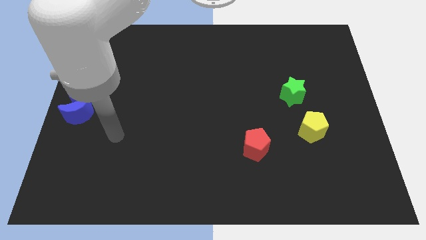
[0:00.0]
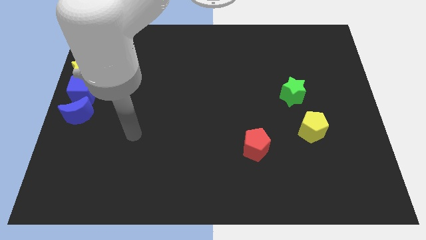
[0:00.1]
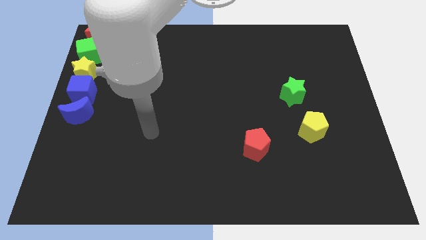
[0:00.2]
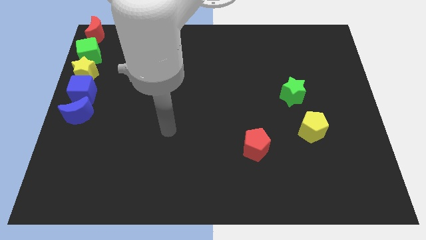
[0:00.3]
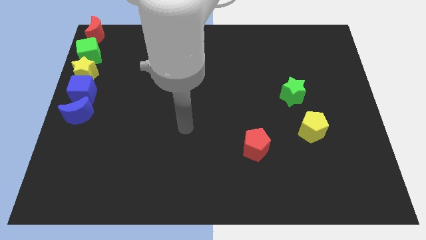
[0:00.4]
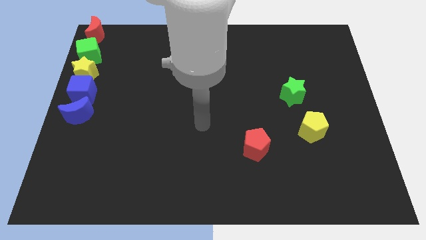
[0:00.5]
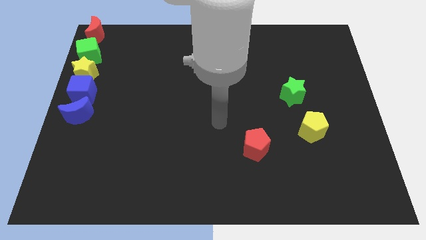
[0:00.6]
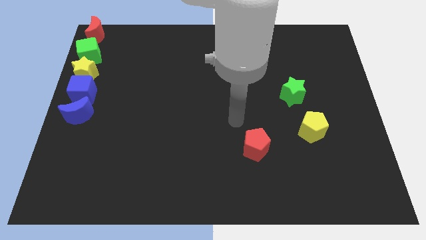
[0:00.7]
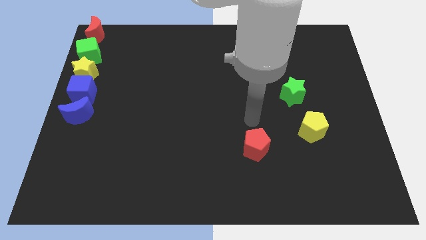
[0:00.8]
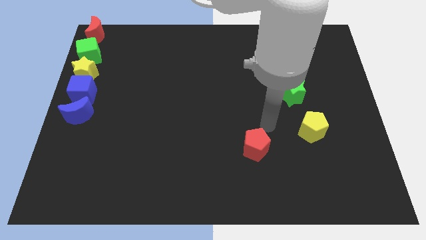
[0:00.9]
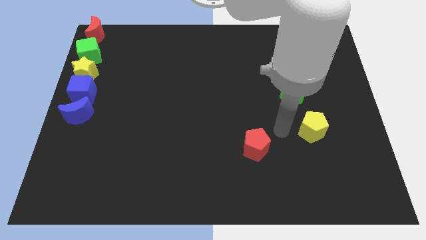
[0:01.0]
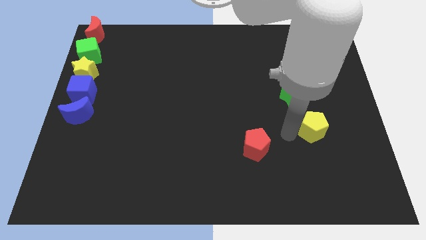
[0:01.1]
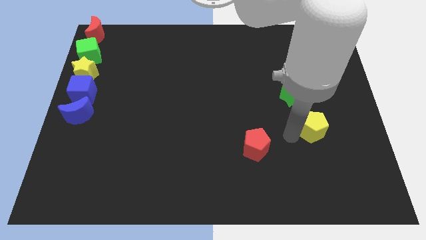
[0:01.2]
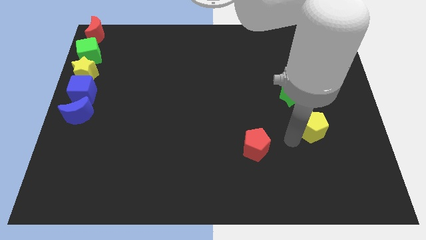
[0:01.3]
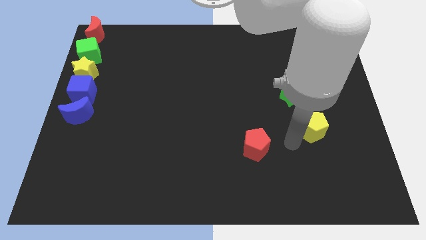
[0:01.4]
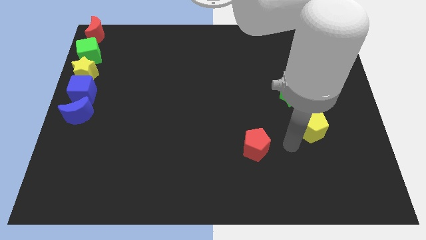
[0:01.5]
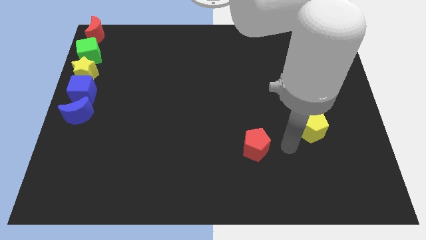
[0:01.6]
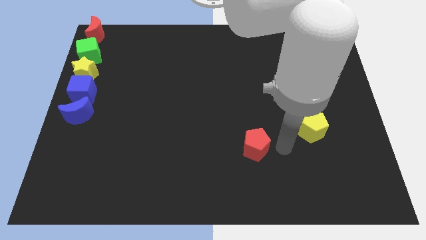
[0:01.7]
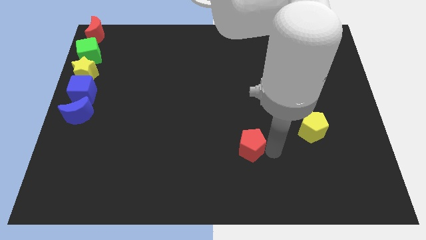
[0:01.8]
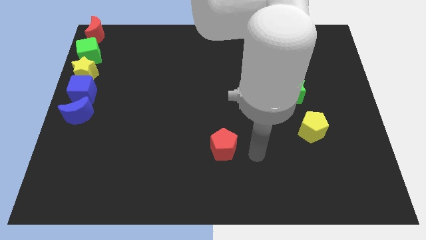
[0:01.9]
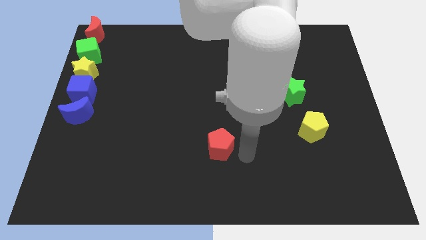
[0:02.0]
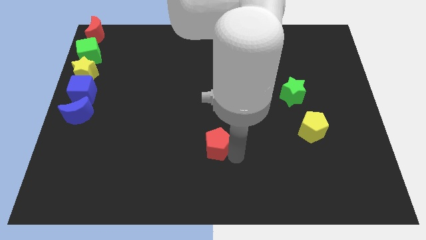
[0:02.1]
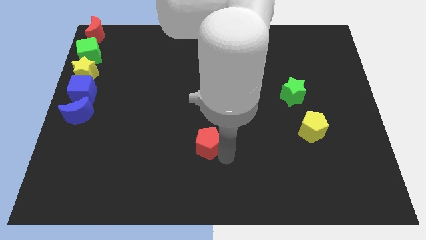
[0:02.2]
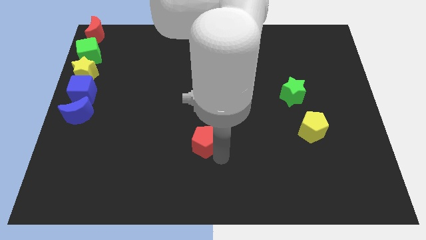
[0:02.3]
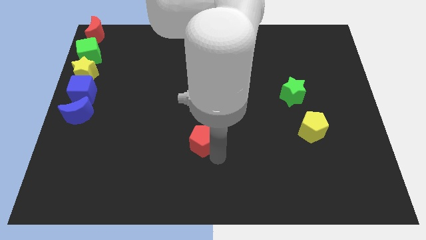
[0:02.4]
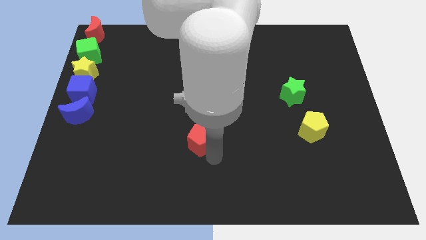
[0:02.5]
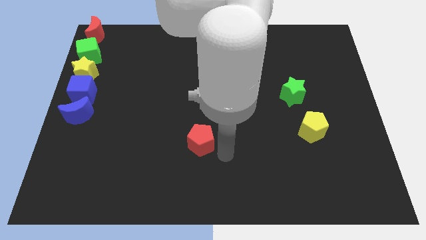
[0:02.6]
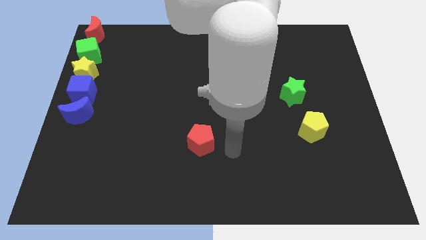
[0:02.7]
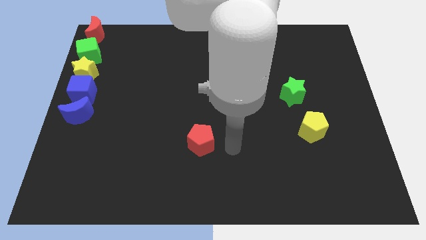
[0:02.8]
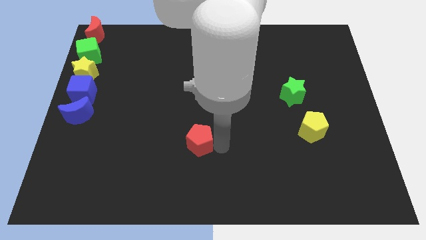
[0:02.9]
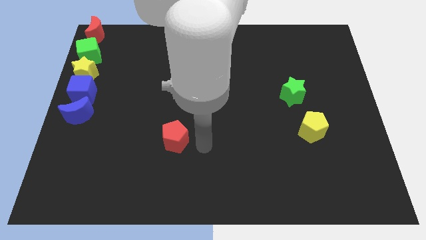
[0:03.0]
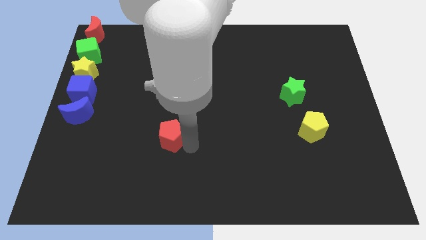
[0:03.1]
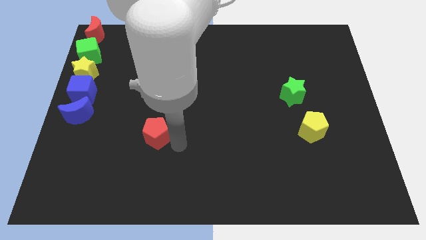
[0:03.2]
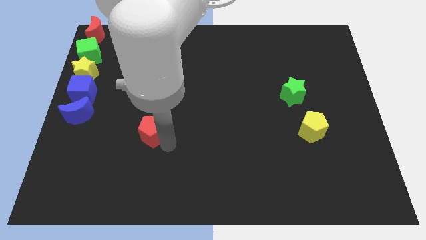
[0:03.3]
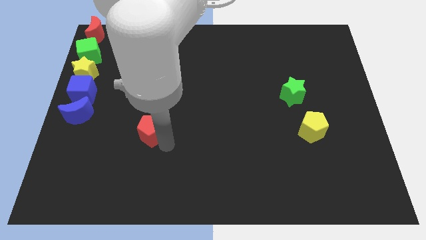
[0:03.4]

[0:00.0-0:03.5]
slide the red pentagon to the left

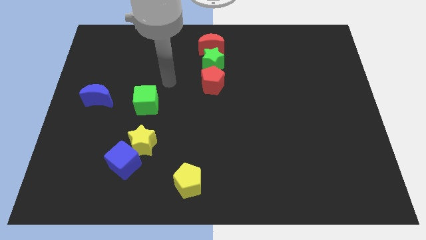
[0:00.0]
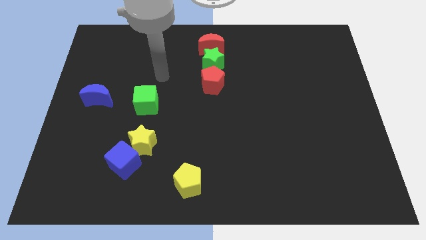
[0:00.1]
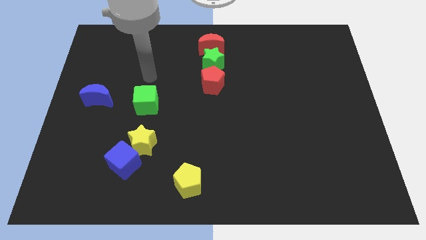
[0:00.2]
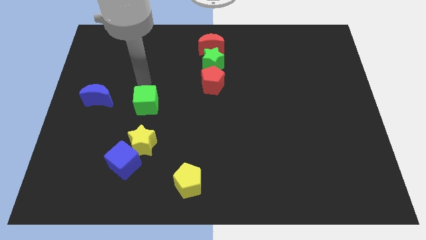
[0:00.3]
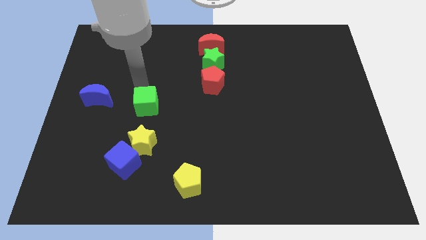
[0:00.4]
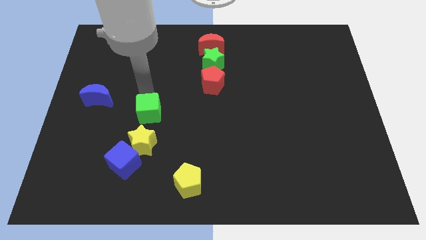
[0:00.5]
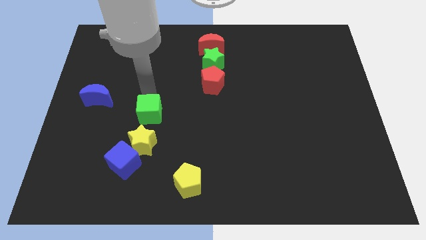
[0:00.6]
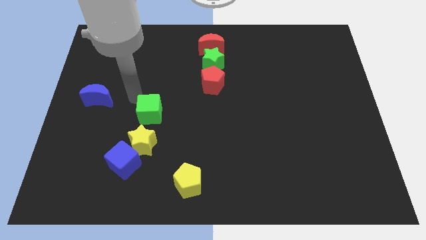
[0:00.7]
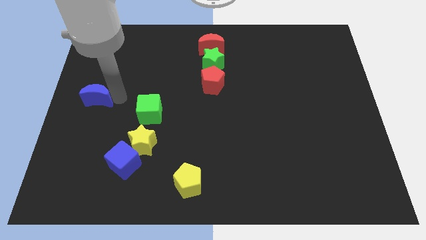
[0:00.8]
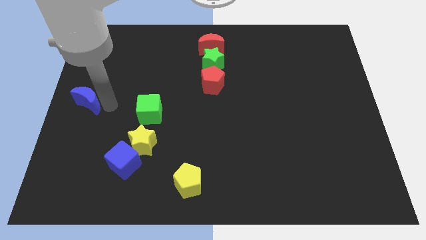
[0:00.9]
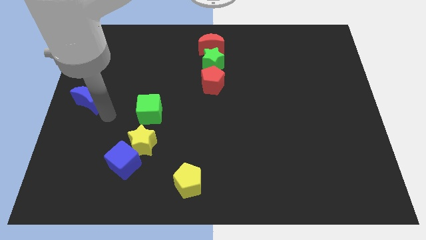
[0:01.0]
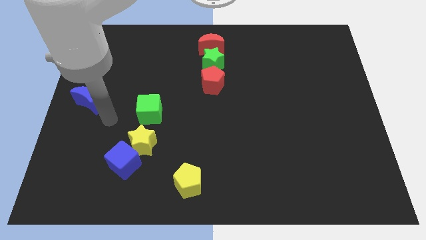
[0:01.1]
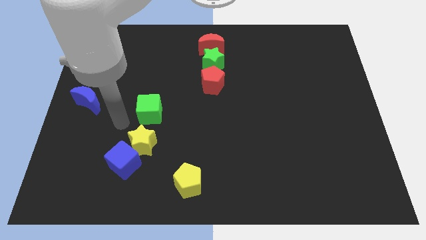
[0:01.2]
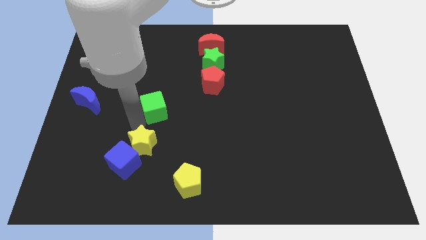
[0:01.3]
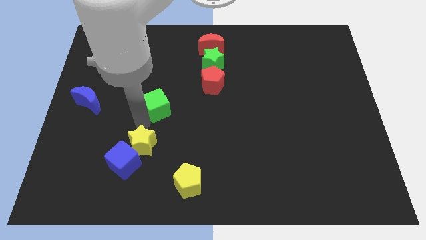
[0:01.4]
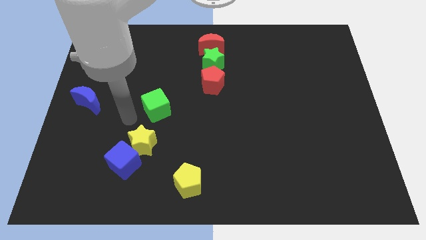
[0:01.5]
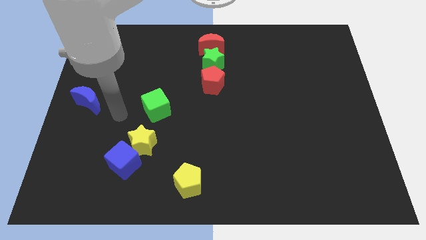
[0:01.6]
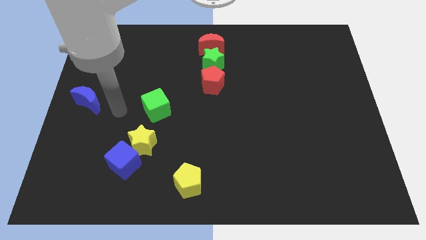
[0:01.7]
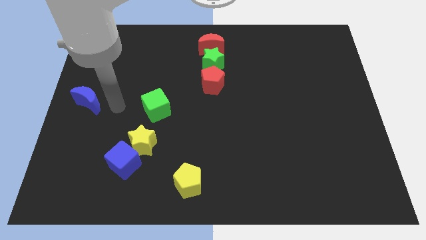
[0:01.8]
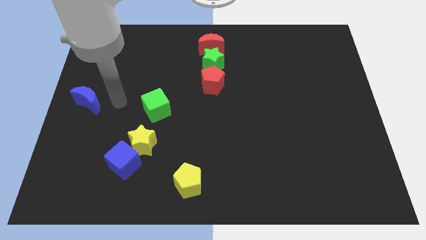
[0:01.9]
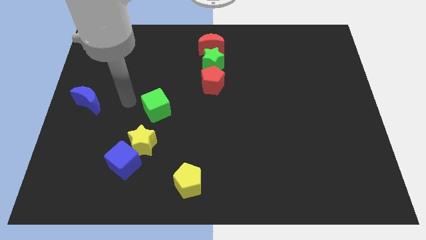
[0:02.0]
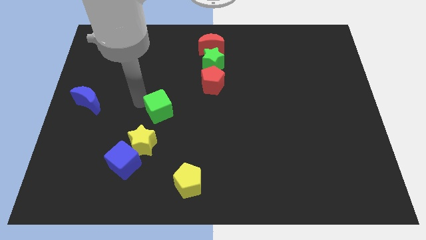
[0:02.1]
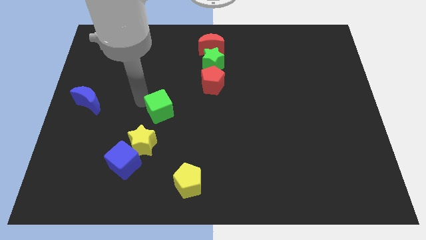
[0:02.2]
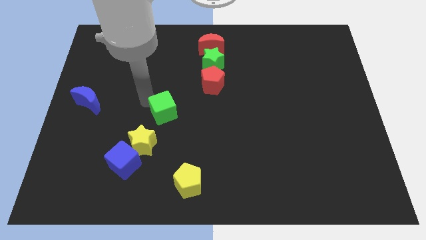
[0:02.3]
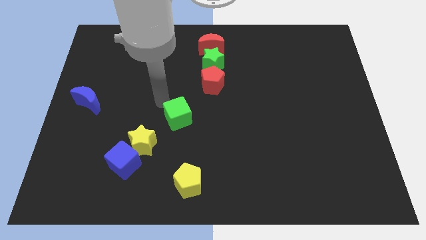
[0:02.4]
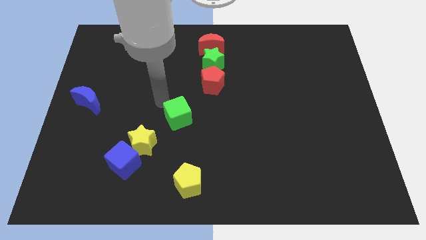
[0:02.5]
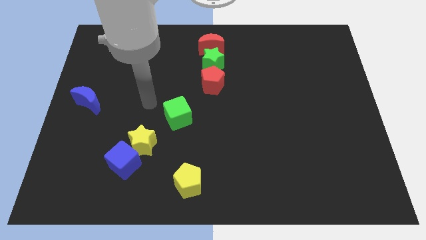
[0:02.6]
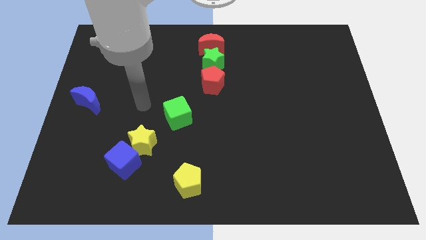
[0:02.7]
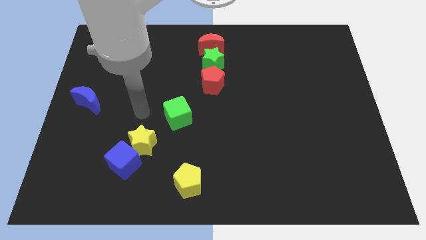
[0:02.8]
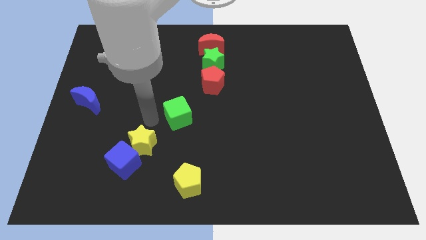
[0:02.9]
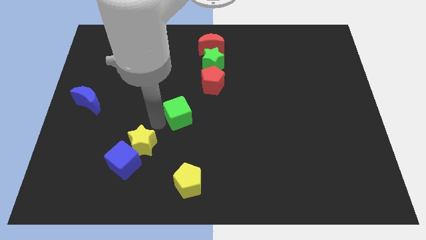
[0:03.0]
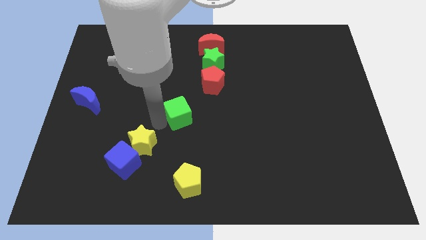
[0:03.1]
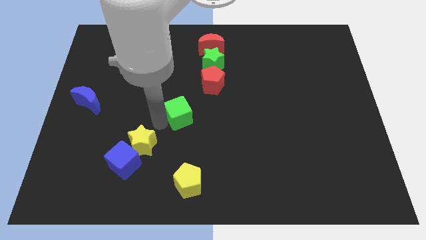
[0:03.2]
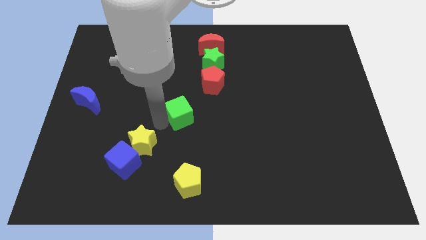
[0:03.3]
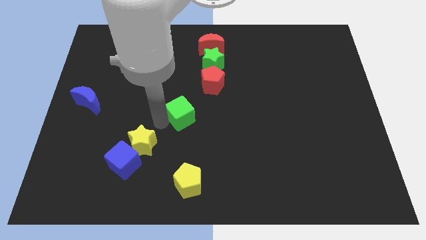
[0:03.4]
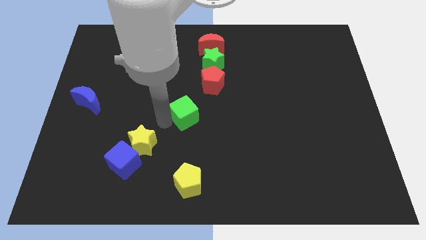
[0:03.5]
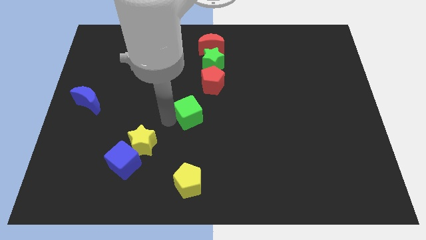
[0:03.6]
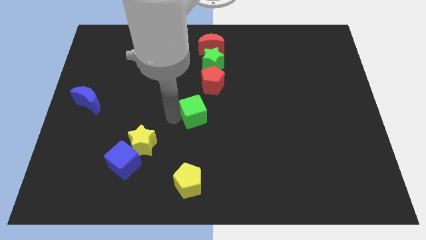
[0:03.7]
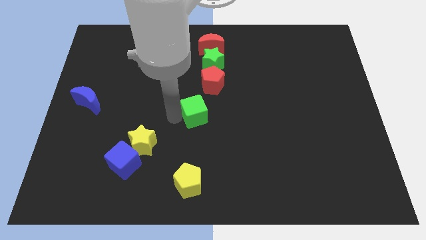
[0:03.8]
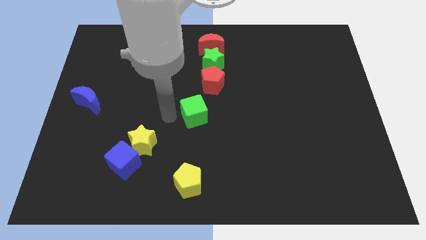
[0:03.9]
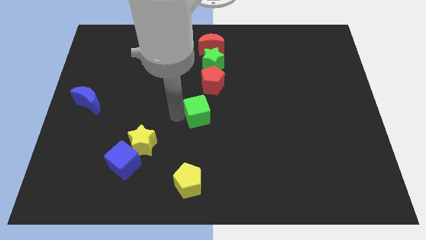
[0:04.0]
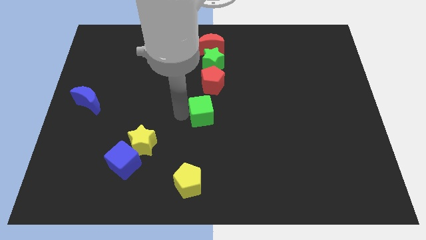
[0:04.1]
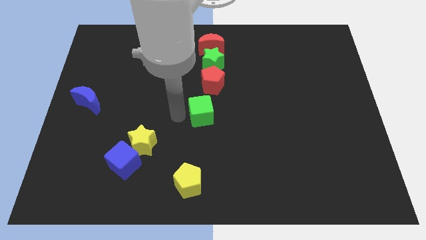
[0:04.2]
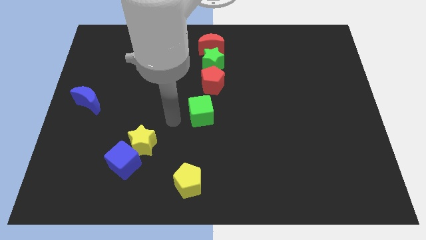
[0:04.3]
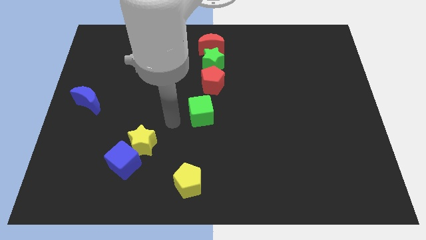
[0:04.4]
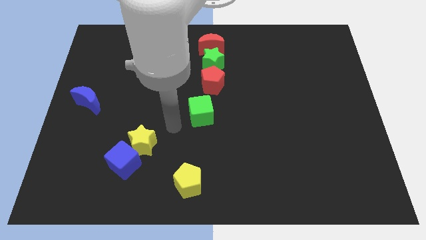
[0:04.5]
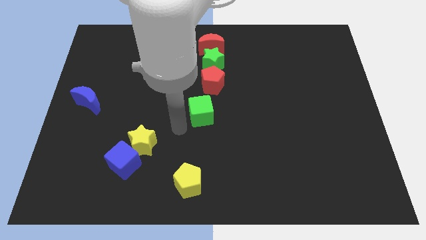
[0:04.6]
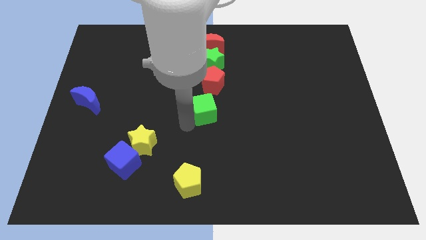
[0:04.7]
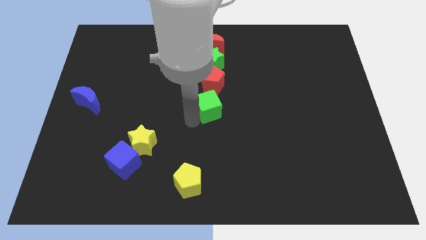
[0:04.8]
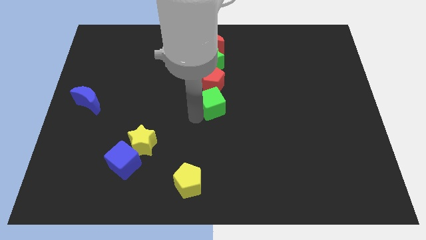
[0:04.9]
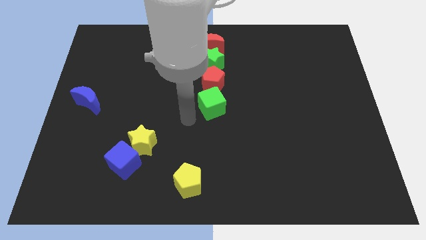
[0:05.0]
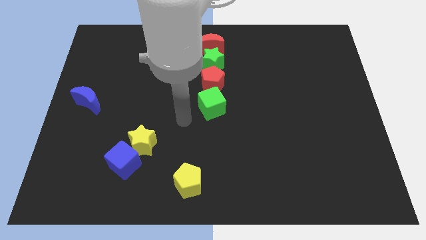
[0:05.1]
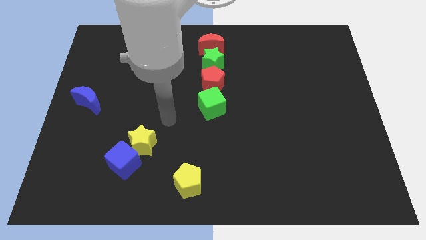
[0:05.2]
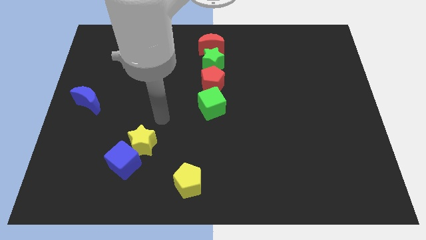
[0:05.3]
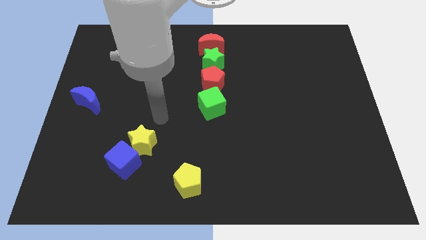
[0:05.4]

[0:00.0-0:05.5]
push the green cube to the bottom side of the red pentagon
